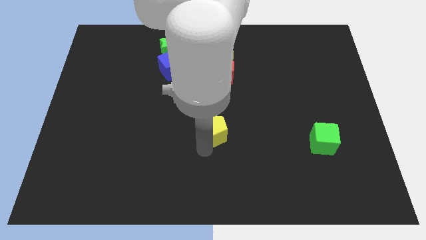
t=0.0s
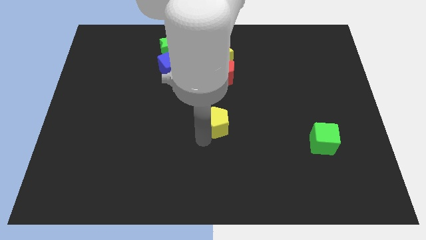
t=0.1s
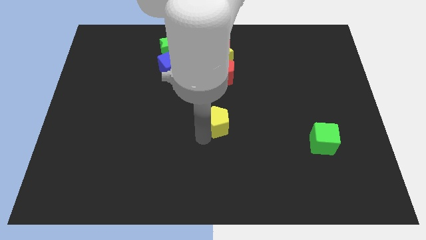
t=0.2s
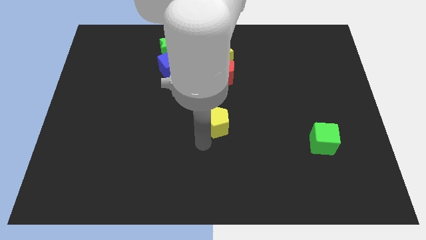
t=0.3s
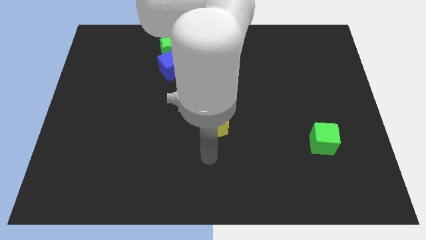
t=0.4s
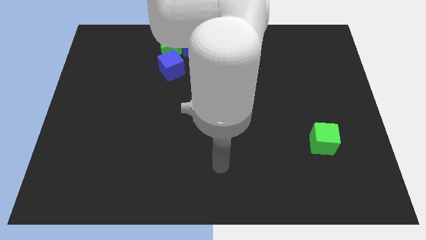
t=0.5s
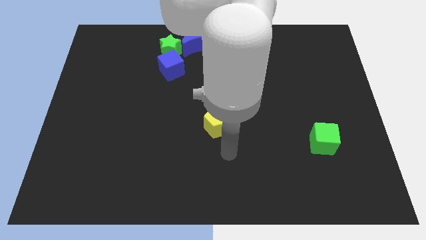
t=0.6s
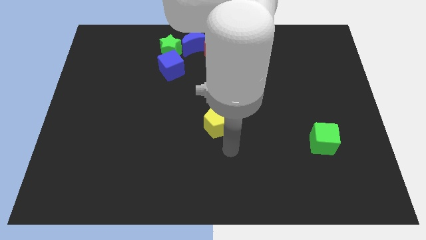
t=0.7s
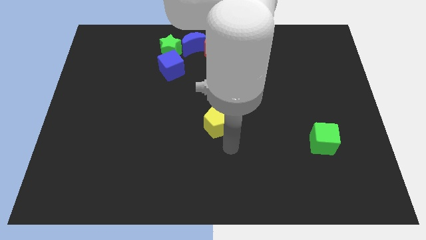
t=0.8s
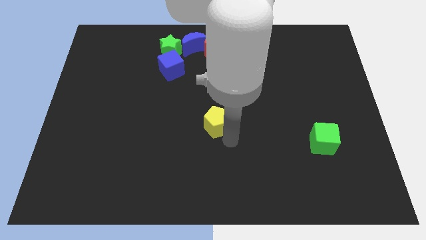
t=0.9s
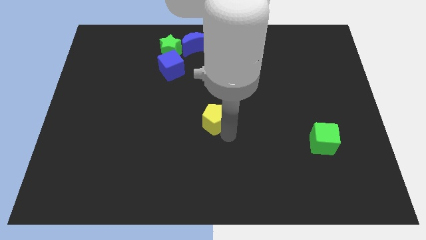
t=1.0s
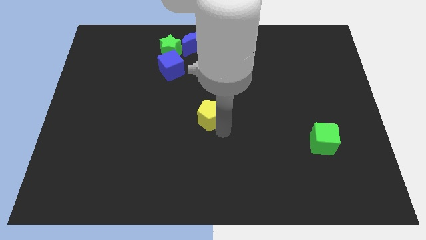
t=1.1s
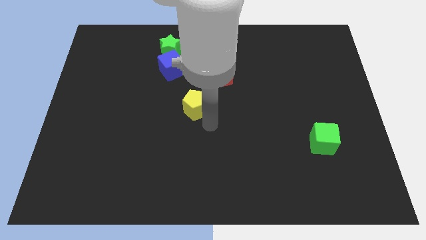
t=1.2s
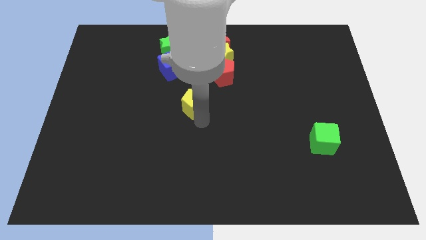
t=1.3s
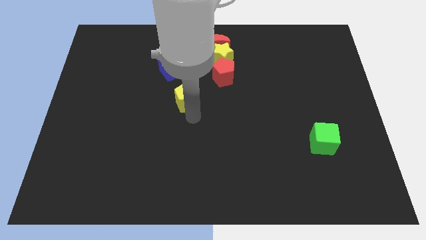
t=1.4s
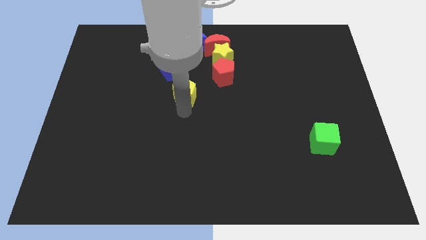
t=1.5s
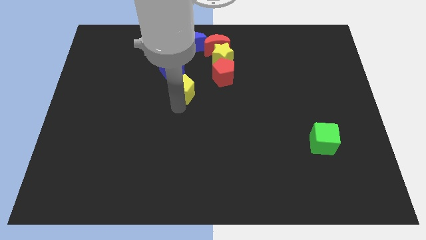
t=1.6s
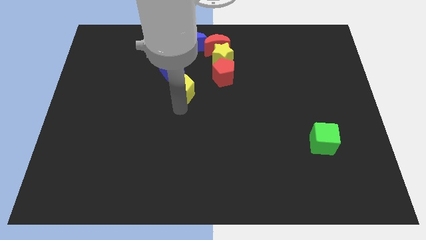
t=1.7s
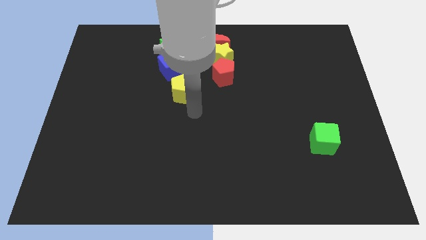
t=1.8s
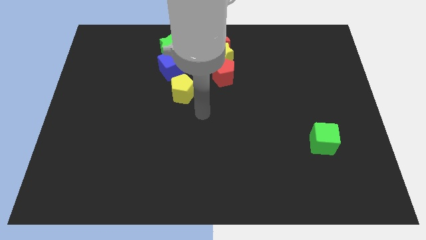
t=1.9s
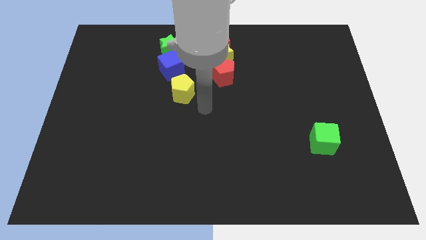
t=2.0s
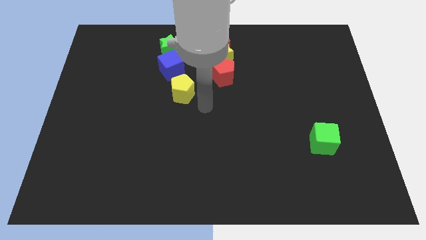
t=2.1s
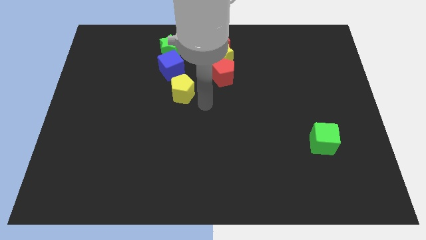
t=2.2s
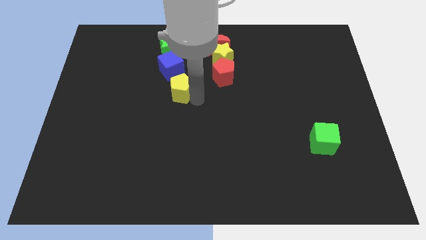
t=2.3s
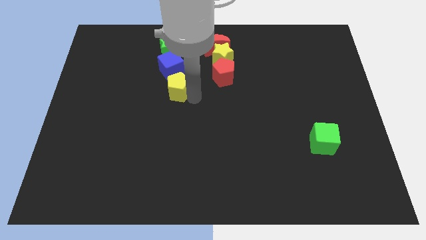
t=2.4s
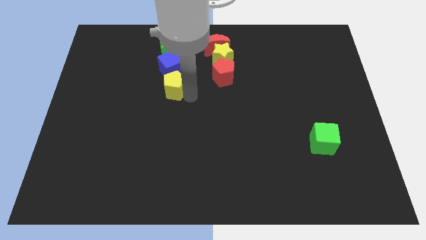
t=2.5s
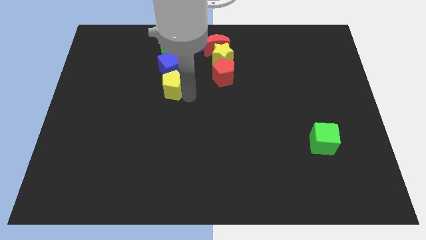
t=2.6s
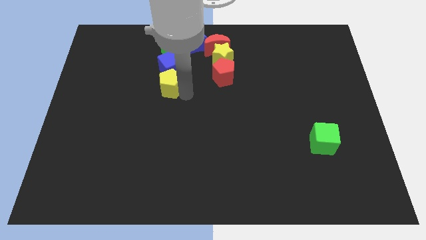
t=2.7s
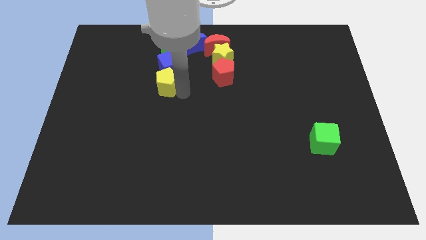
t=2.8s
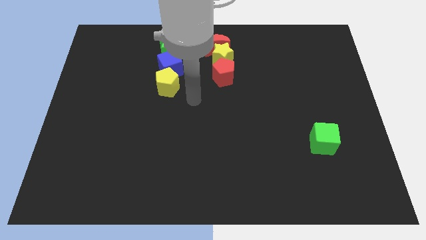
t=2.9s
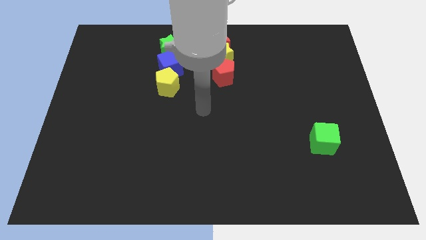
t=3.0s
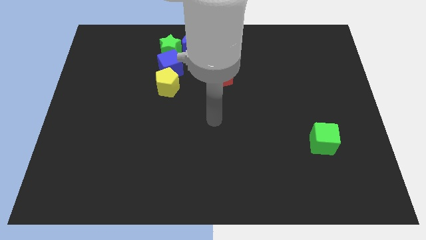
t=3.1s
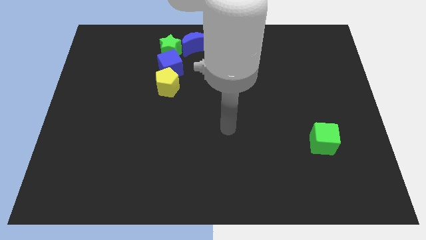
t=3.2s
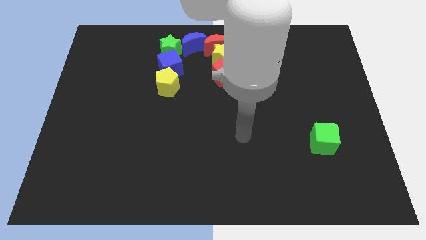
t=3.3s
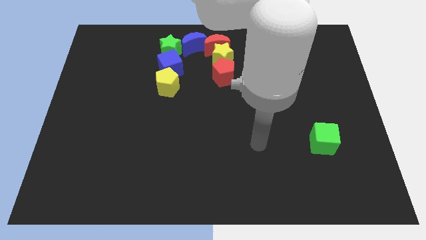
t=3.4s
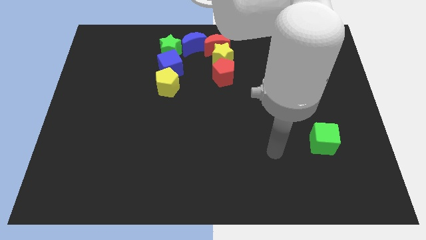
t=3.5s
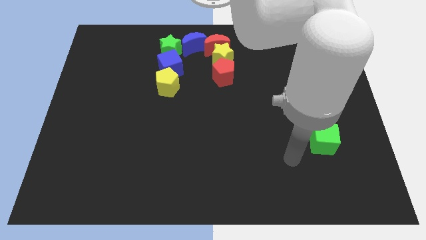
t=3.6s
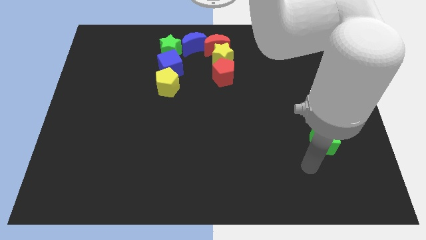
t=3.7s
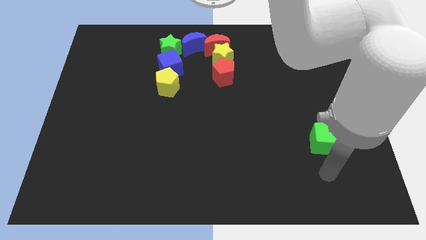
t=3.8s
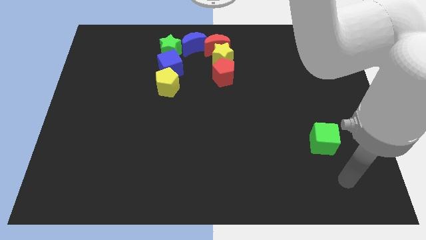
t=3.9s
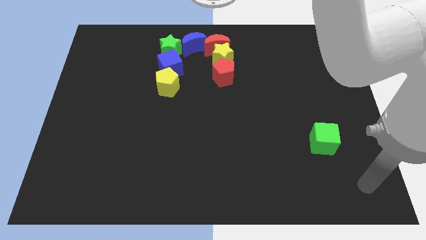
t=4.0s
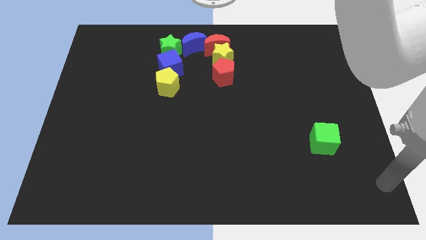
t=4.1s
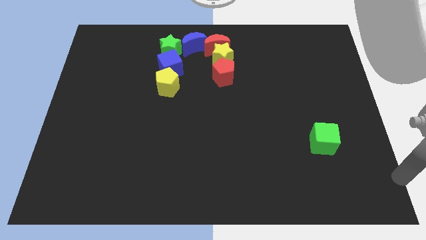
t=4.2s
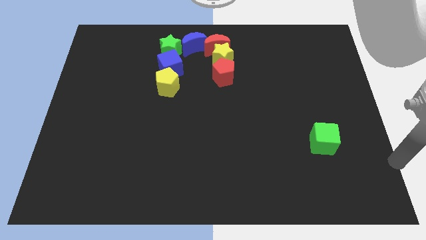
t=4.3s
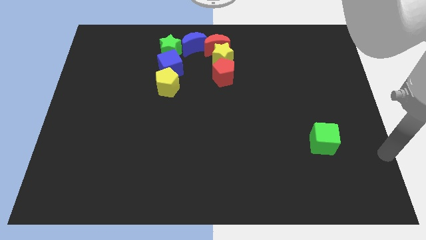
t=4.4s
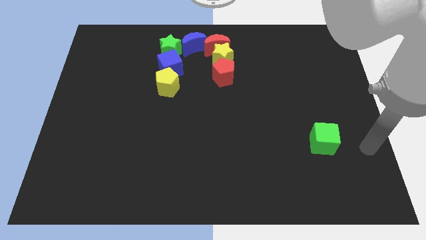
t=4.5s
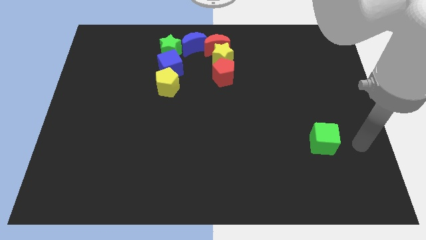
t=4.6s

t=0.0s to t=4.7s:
place yellow pentagon below the blue cube

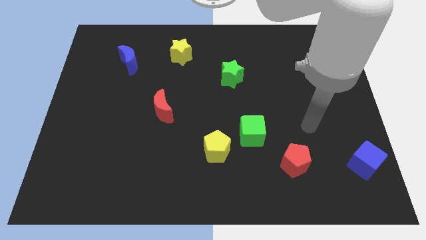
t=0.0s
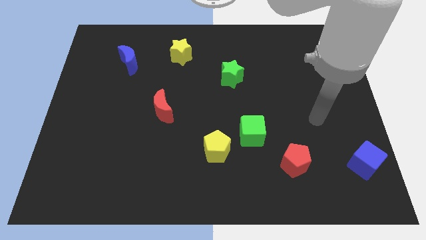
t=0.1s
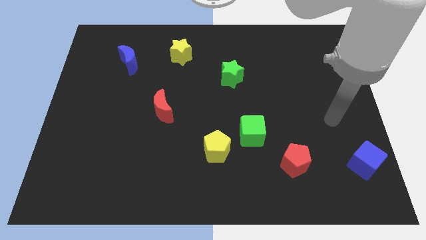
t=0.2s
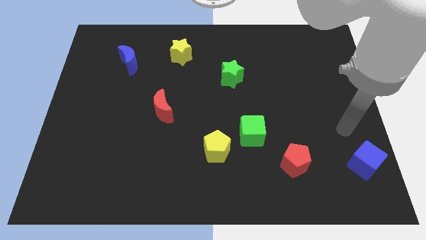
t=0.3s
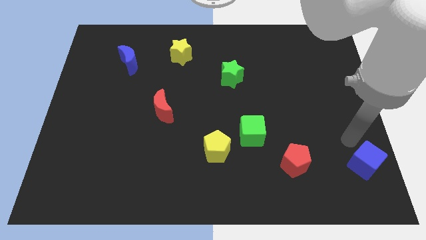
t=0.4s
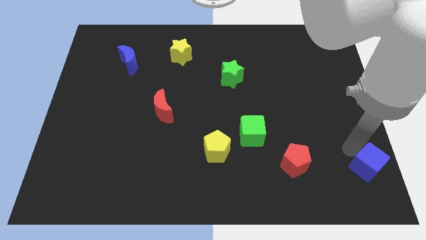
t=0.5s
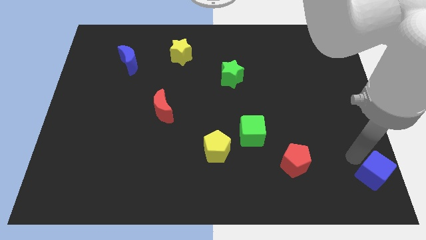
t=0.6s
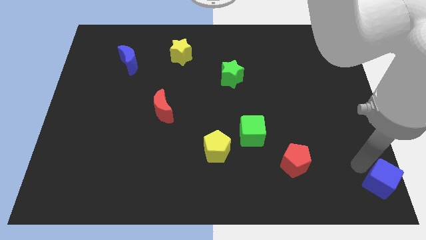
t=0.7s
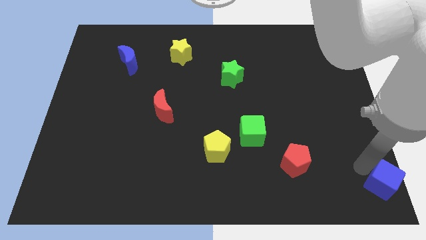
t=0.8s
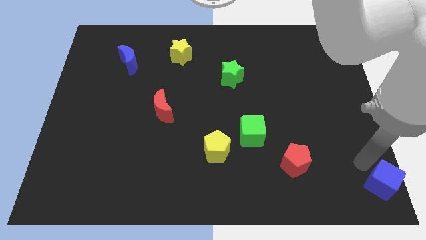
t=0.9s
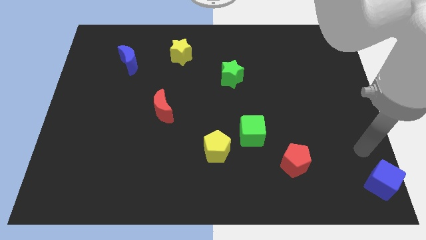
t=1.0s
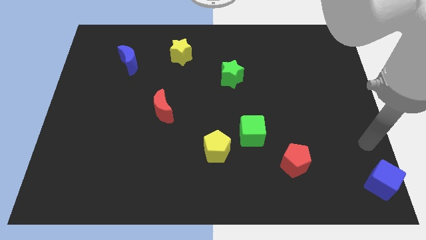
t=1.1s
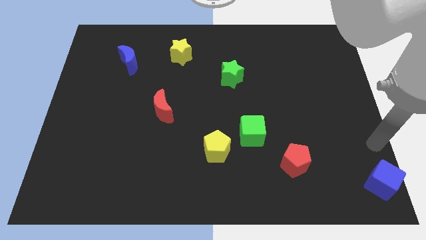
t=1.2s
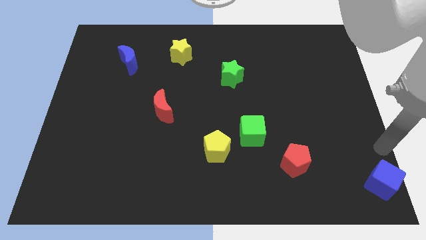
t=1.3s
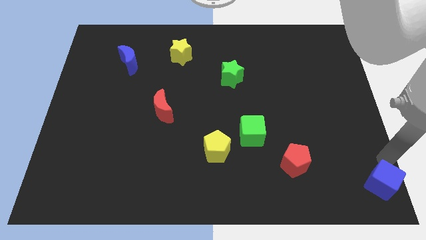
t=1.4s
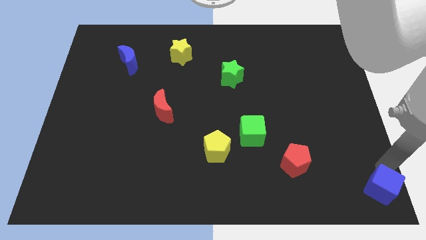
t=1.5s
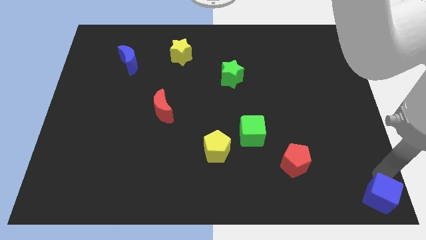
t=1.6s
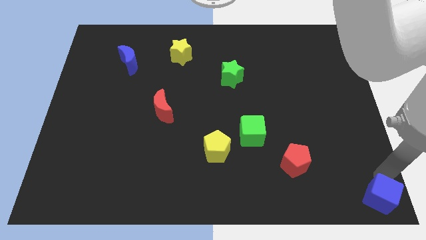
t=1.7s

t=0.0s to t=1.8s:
place the blue cube at the bottom right corner of the board

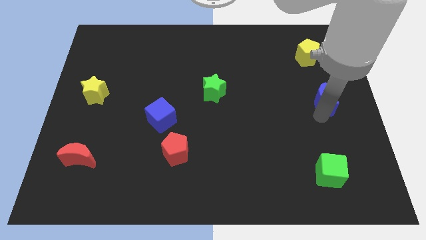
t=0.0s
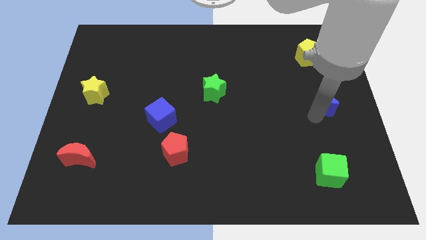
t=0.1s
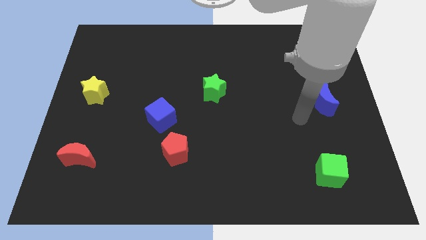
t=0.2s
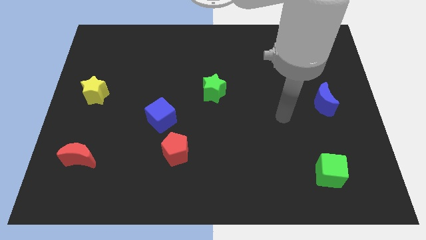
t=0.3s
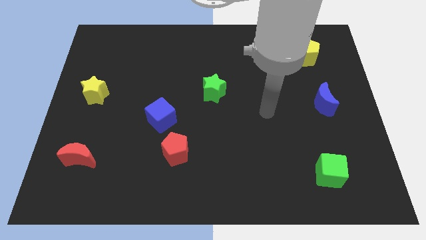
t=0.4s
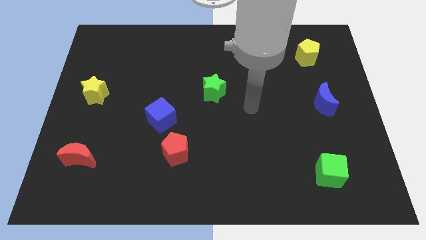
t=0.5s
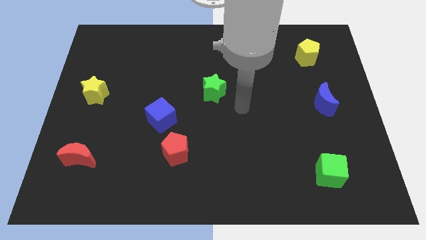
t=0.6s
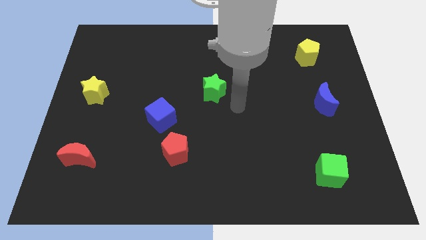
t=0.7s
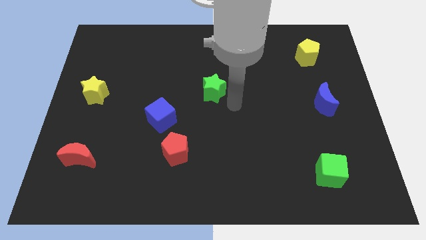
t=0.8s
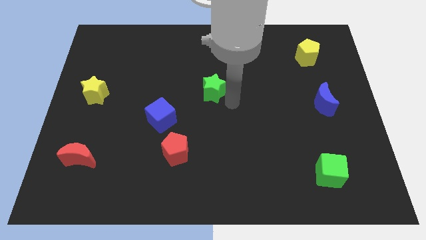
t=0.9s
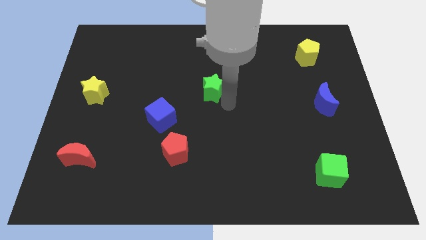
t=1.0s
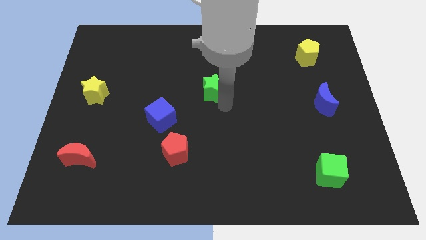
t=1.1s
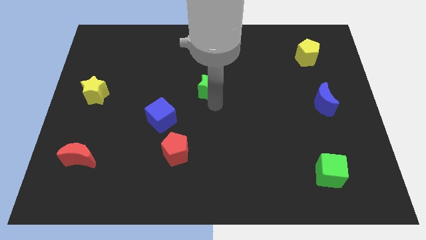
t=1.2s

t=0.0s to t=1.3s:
push the green star slightly to the top

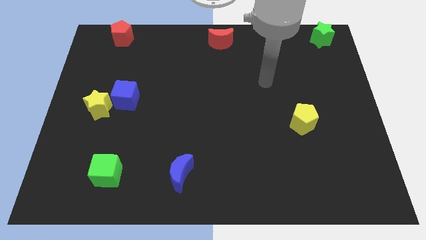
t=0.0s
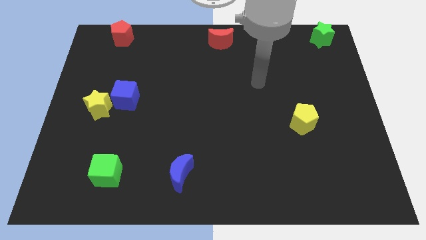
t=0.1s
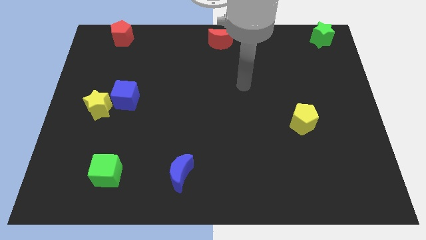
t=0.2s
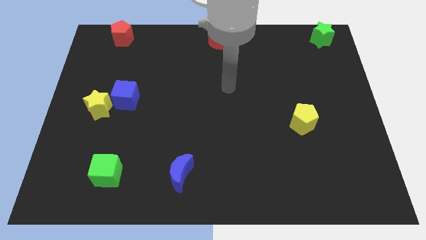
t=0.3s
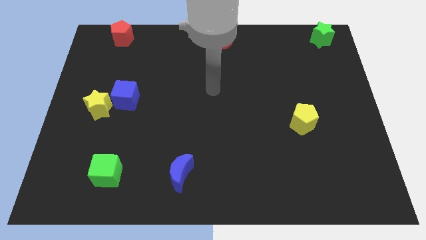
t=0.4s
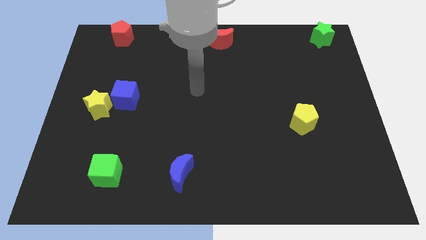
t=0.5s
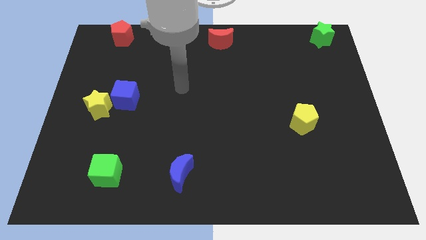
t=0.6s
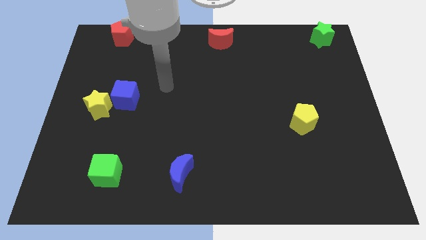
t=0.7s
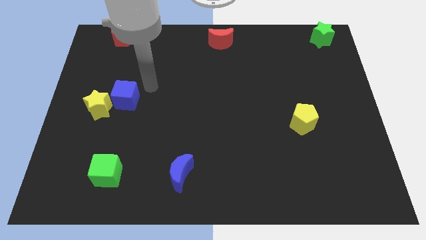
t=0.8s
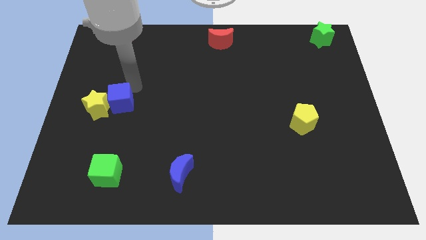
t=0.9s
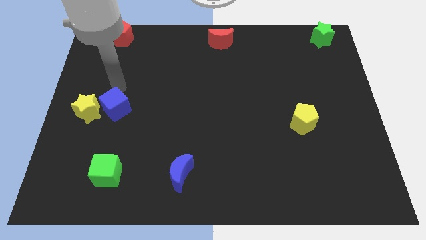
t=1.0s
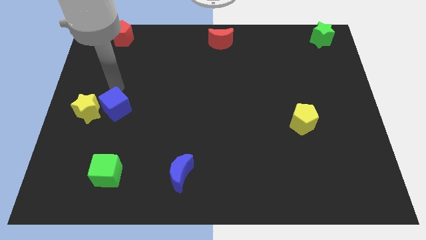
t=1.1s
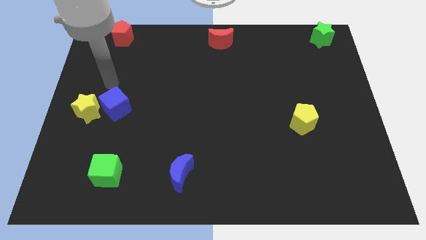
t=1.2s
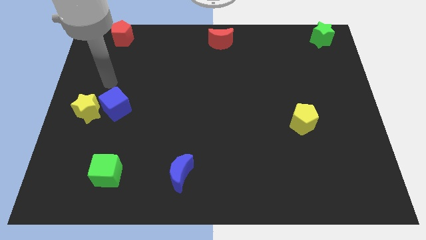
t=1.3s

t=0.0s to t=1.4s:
move your arm close to the blue cube
